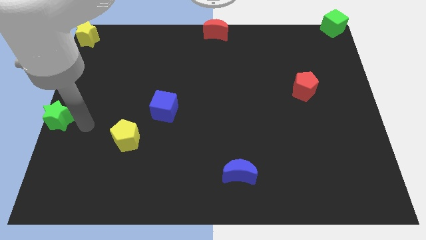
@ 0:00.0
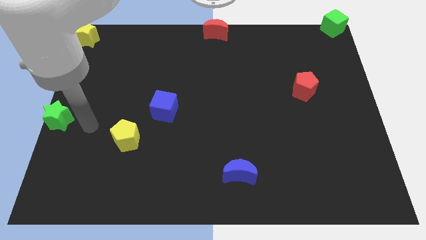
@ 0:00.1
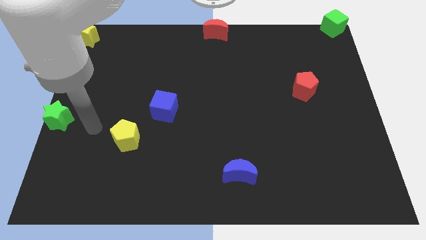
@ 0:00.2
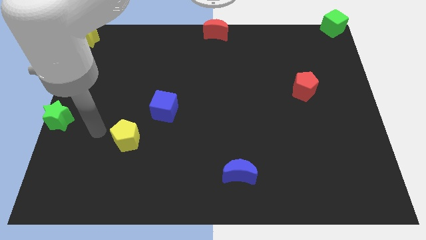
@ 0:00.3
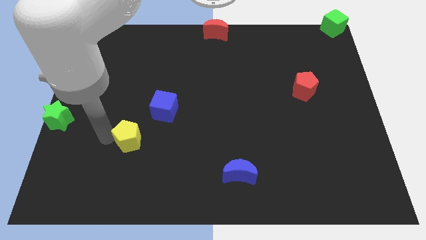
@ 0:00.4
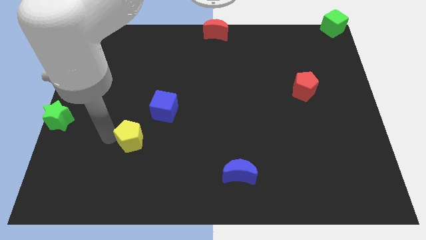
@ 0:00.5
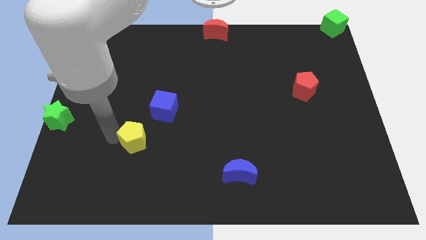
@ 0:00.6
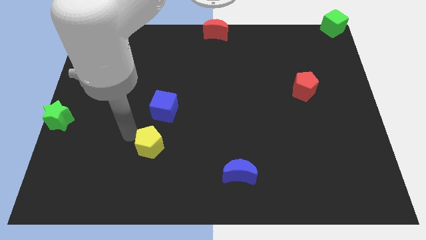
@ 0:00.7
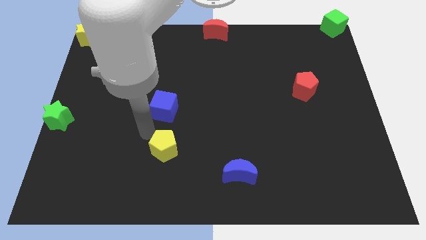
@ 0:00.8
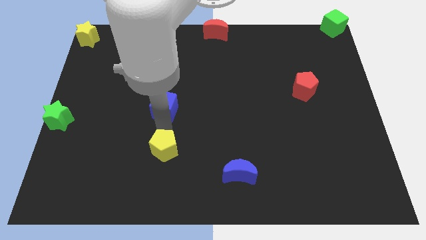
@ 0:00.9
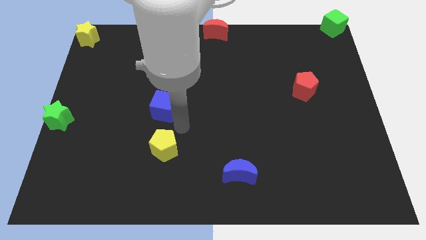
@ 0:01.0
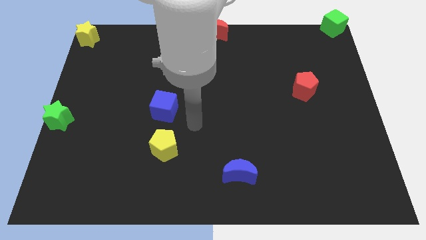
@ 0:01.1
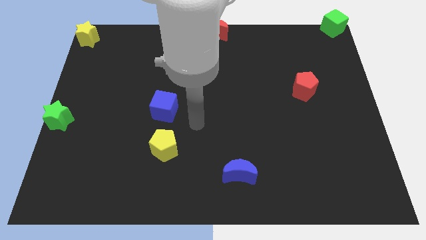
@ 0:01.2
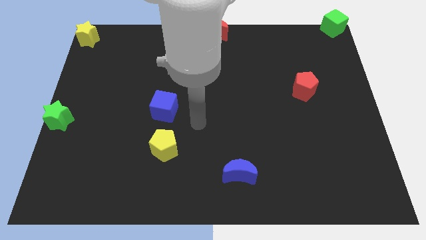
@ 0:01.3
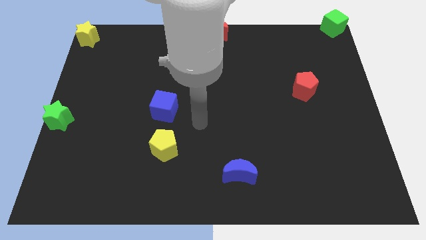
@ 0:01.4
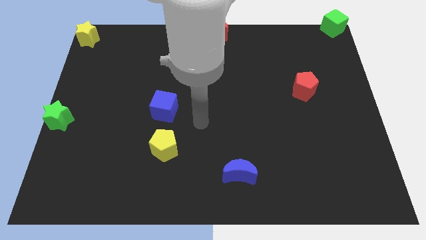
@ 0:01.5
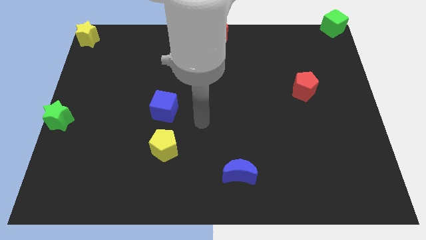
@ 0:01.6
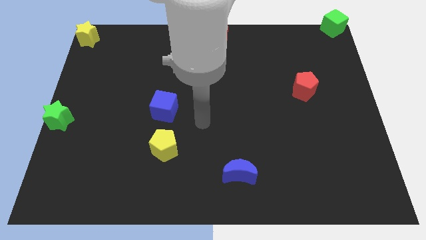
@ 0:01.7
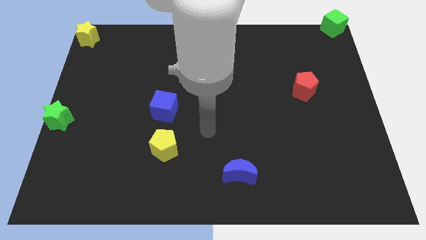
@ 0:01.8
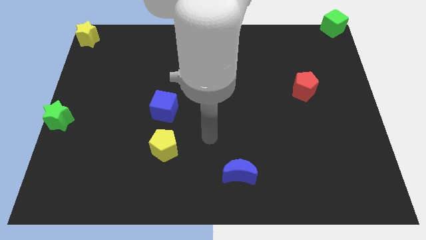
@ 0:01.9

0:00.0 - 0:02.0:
place the yellow pentagon at the bottom of blue cube

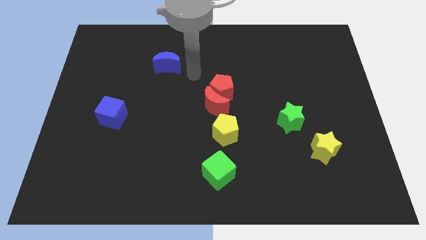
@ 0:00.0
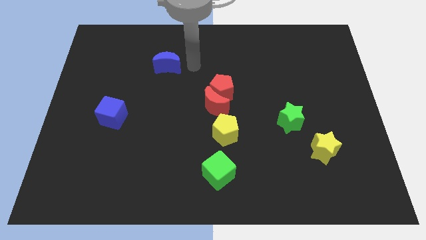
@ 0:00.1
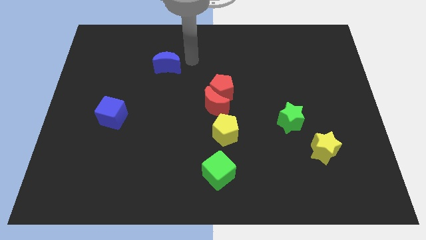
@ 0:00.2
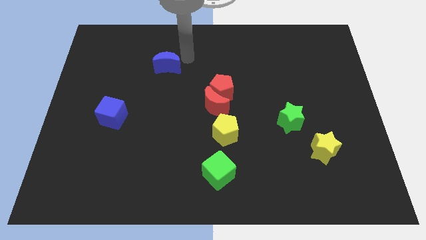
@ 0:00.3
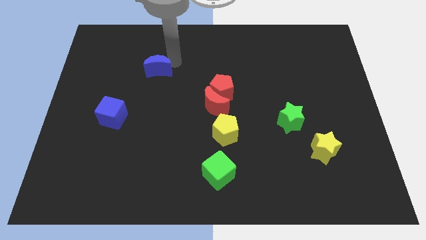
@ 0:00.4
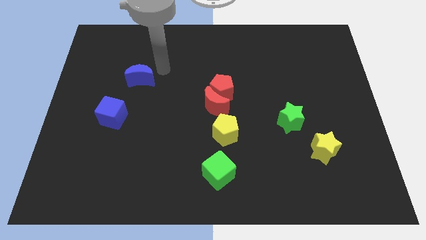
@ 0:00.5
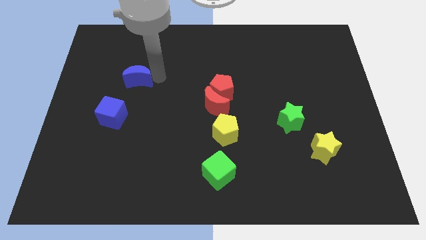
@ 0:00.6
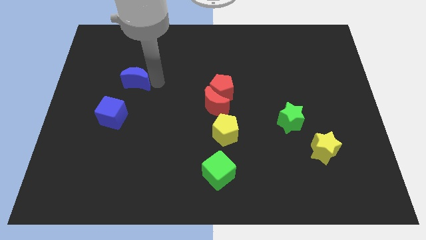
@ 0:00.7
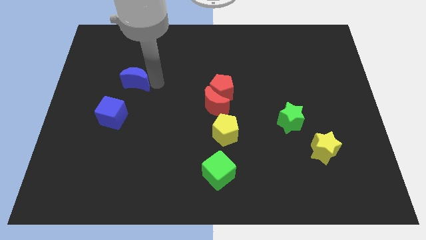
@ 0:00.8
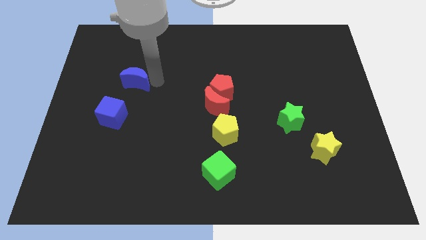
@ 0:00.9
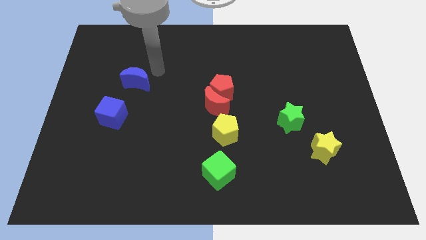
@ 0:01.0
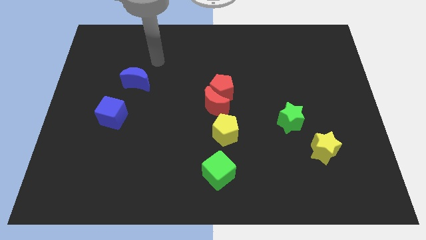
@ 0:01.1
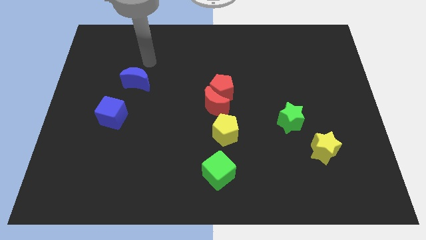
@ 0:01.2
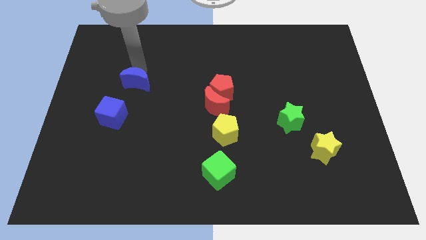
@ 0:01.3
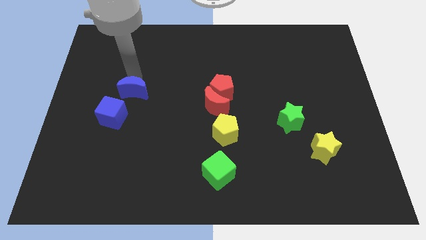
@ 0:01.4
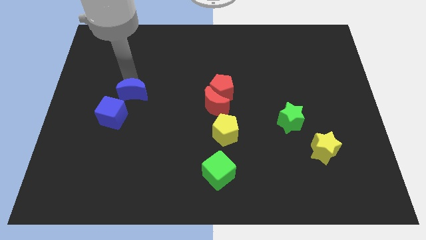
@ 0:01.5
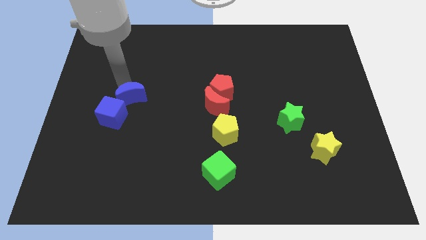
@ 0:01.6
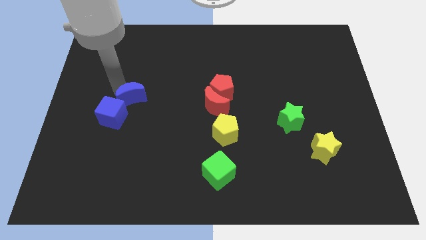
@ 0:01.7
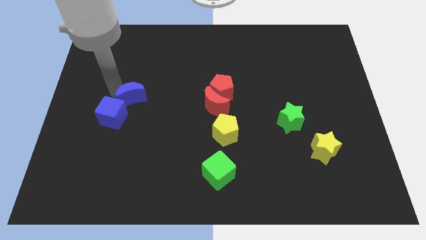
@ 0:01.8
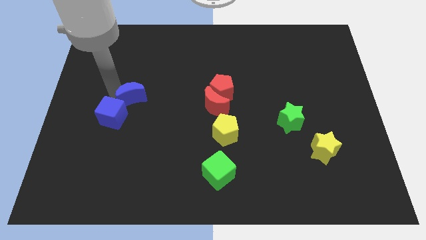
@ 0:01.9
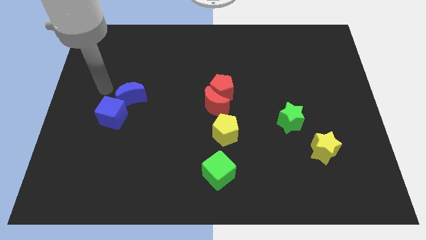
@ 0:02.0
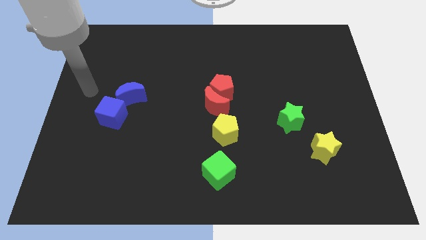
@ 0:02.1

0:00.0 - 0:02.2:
move the blue crescent above the blue cube

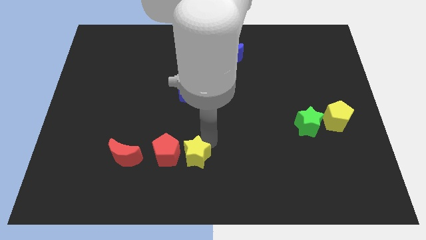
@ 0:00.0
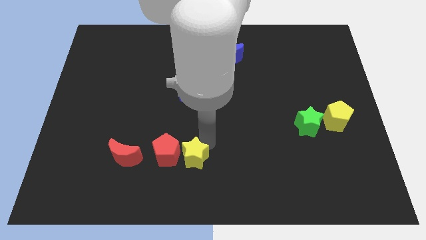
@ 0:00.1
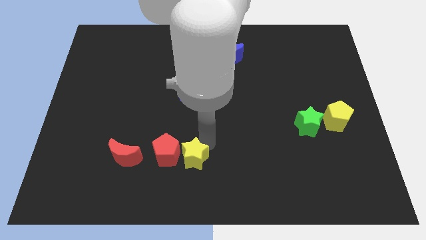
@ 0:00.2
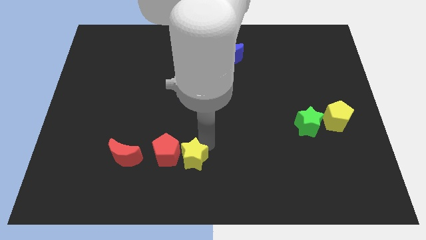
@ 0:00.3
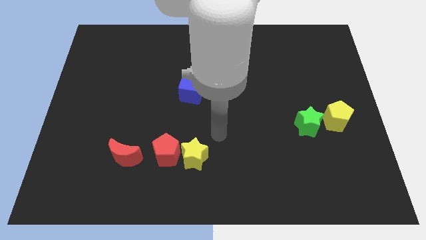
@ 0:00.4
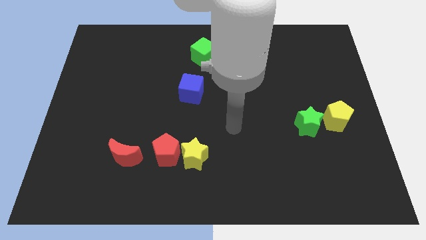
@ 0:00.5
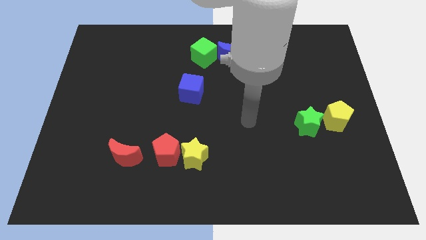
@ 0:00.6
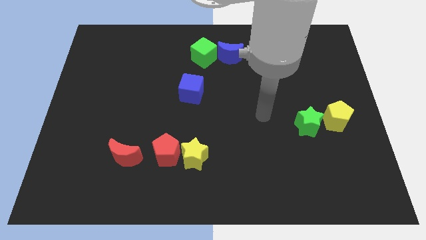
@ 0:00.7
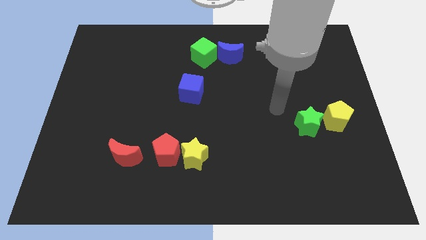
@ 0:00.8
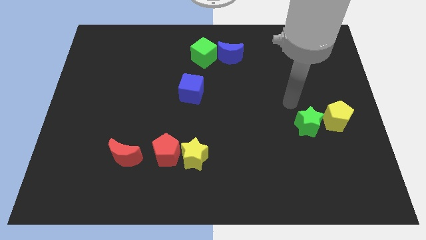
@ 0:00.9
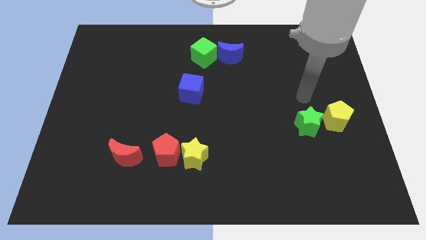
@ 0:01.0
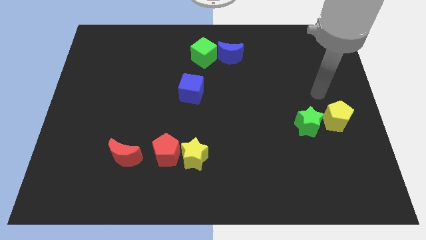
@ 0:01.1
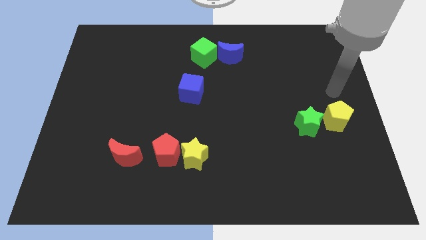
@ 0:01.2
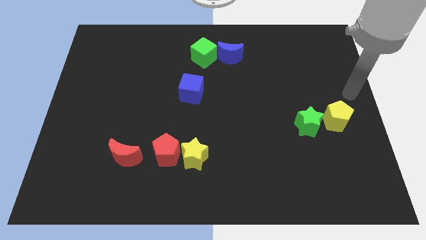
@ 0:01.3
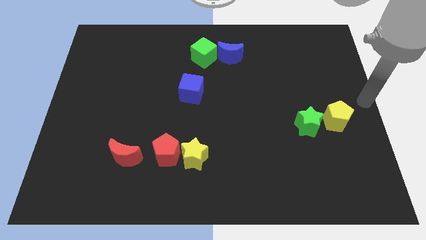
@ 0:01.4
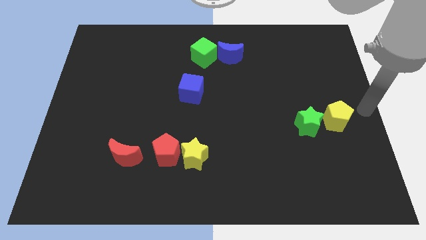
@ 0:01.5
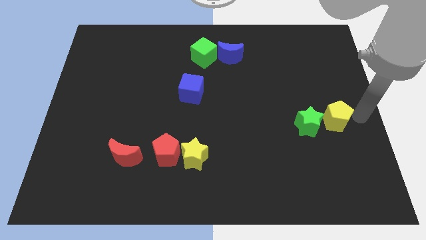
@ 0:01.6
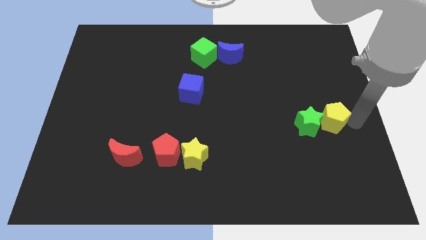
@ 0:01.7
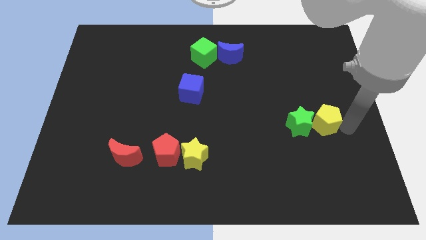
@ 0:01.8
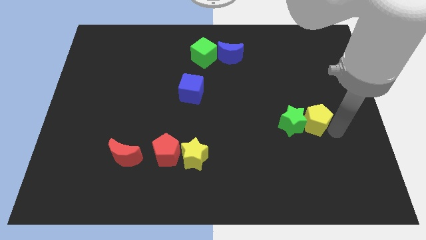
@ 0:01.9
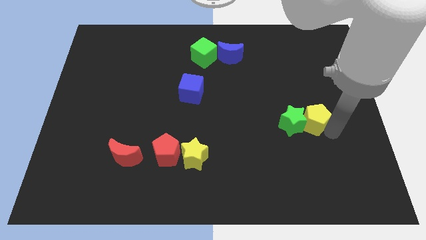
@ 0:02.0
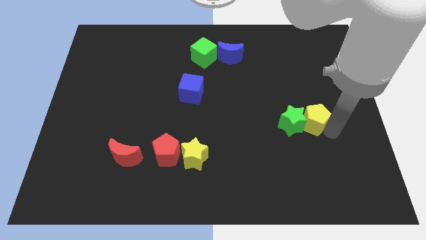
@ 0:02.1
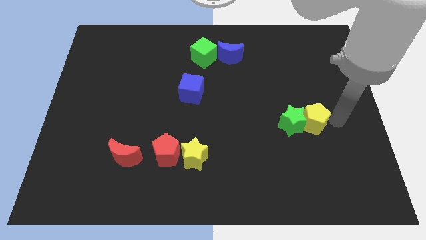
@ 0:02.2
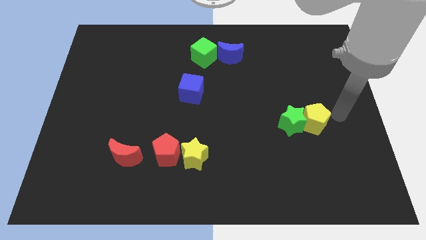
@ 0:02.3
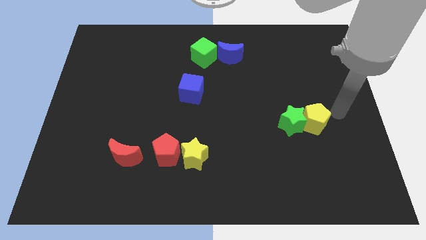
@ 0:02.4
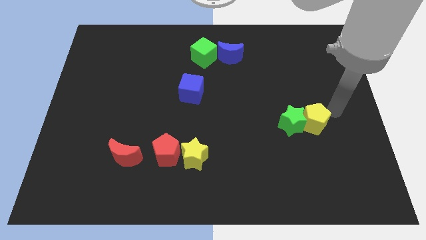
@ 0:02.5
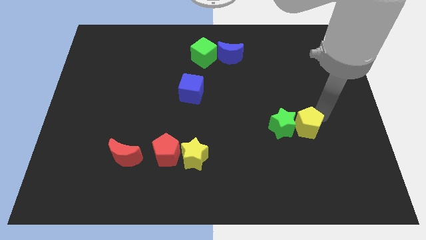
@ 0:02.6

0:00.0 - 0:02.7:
move yellow pentagon along with green star to the right center

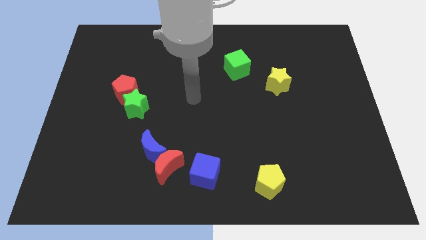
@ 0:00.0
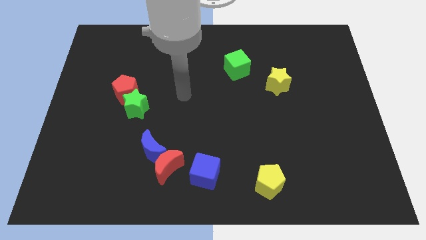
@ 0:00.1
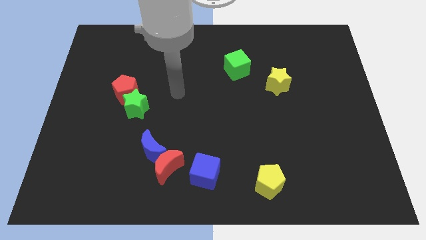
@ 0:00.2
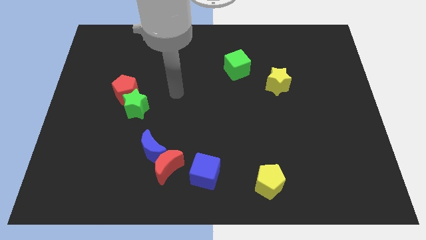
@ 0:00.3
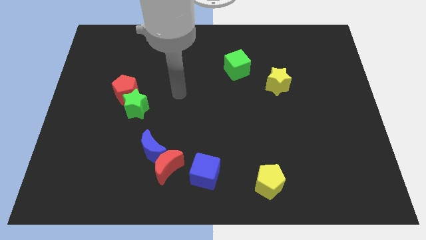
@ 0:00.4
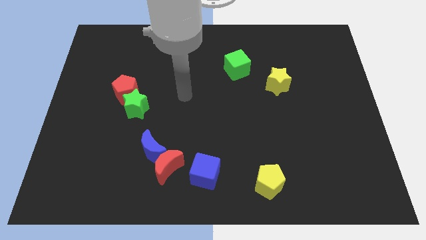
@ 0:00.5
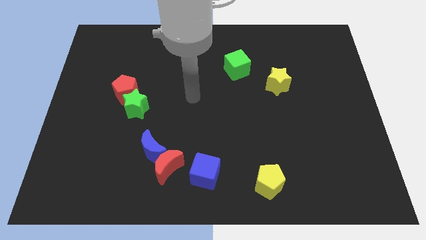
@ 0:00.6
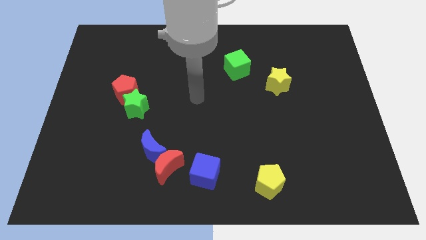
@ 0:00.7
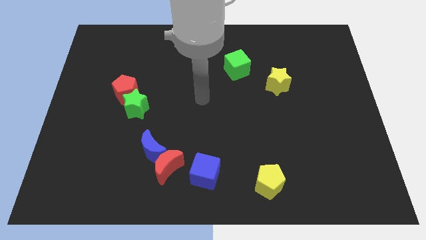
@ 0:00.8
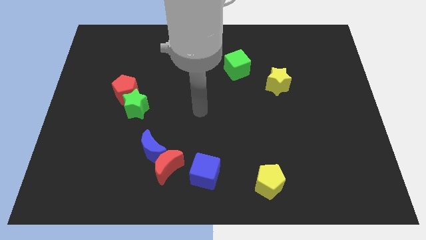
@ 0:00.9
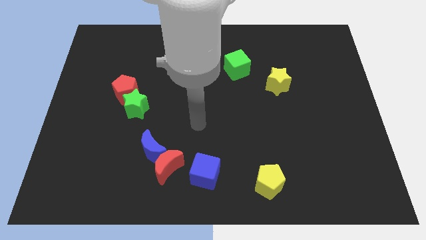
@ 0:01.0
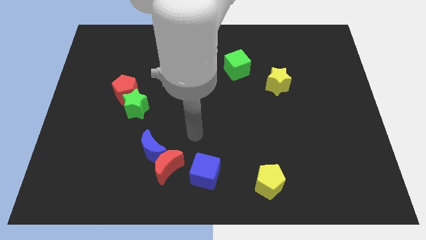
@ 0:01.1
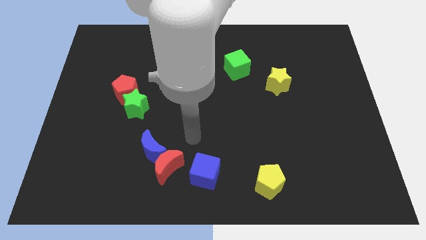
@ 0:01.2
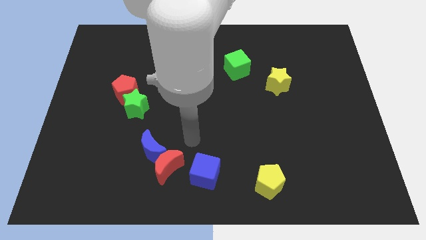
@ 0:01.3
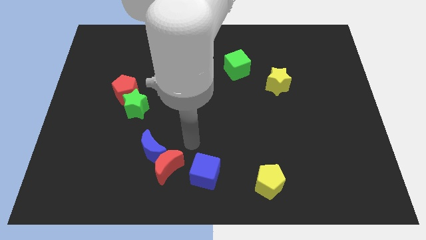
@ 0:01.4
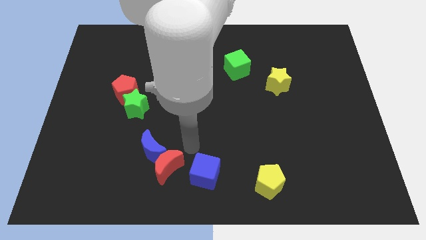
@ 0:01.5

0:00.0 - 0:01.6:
place your arm at the top of the red crescent

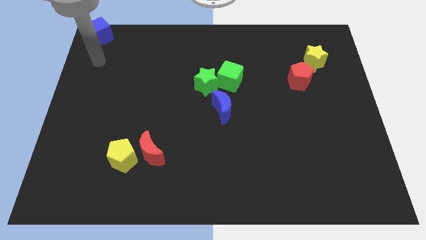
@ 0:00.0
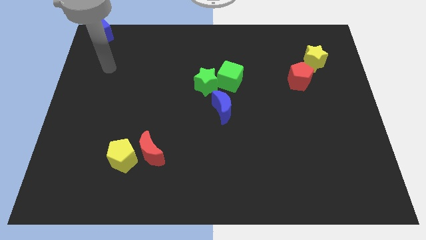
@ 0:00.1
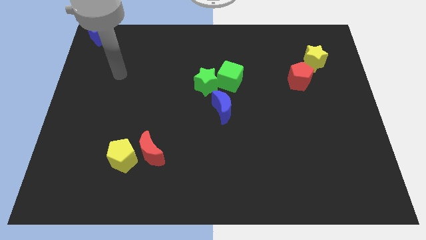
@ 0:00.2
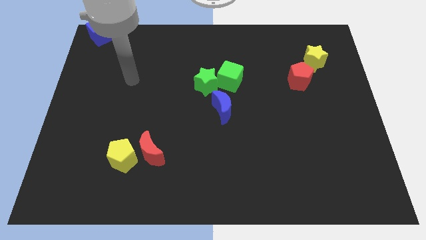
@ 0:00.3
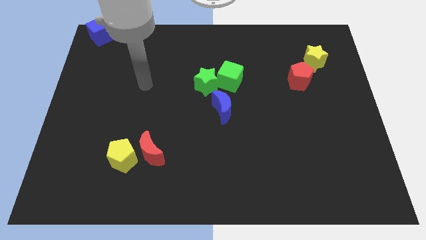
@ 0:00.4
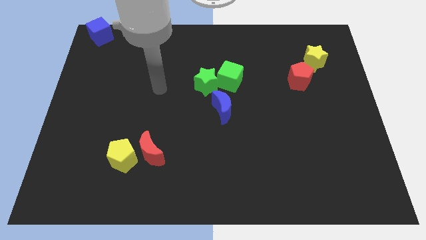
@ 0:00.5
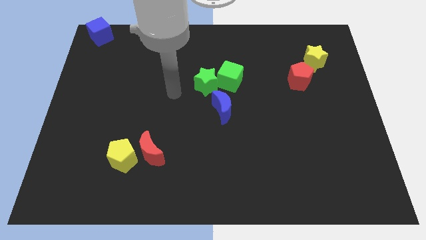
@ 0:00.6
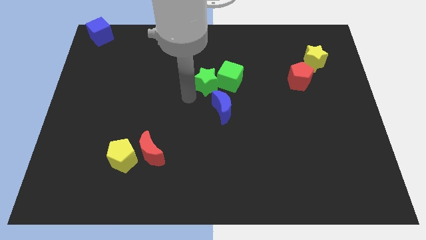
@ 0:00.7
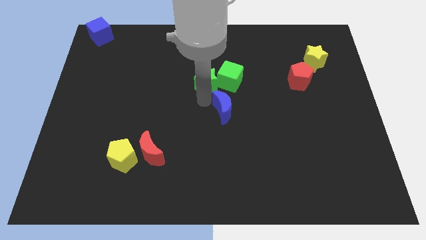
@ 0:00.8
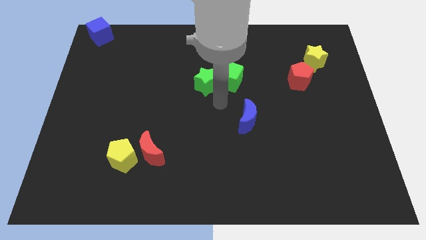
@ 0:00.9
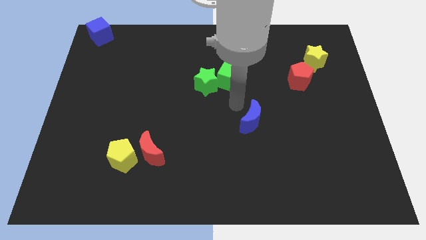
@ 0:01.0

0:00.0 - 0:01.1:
separate blue moon from green star
